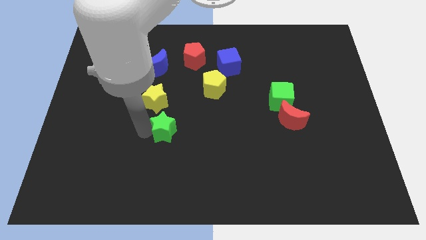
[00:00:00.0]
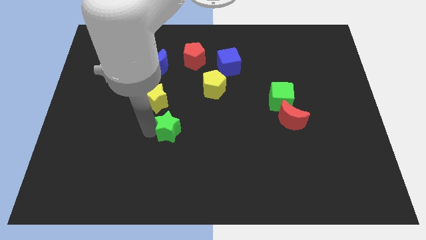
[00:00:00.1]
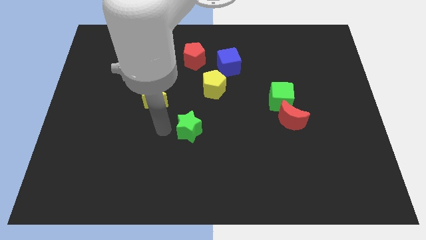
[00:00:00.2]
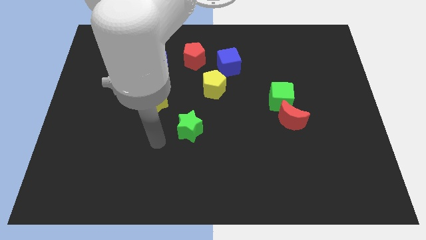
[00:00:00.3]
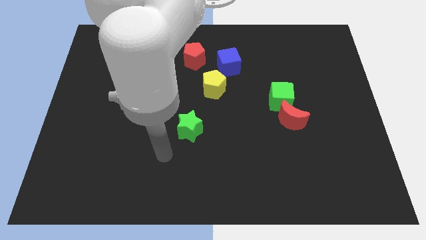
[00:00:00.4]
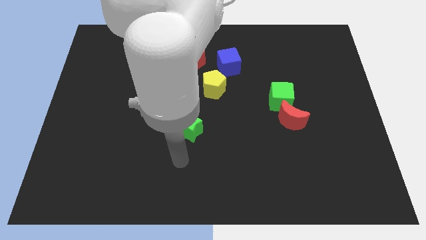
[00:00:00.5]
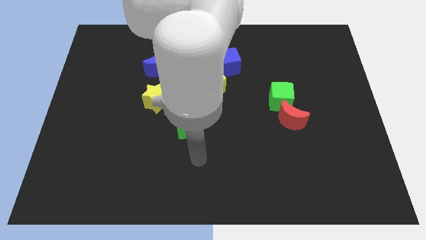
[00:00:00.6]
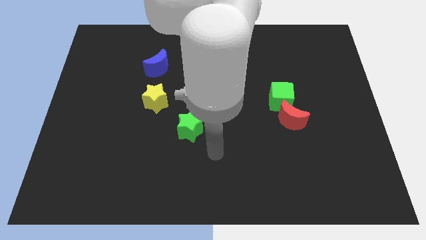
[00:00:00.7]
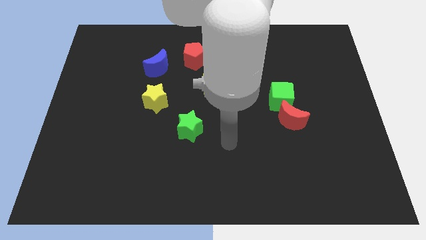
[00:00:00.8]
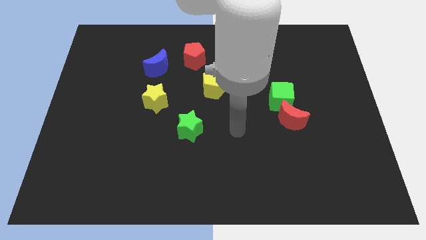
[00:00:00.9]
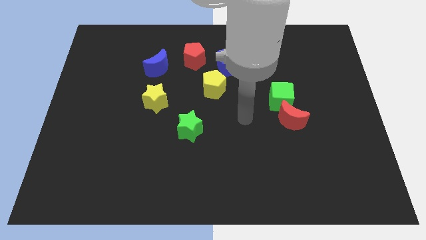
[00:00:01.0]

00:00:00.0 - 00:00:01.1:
slightly push the green star to the right

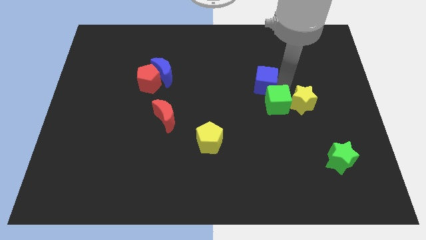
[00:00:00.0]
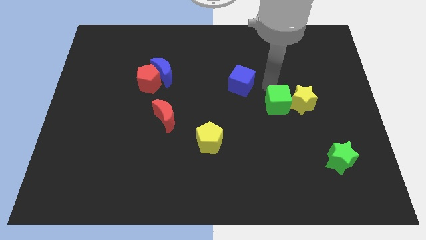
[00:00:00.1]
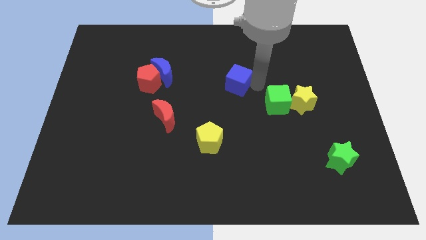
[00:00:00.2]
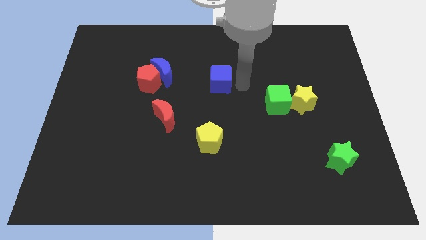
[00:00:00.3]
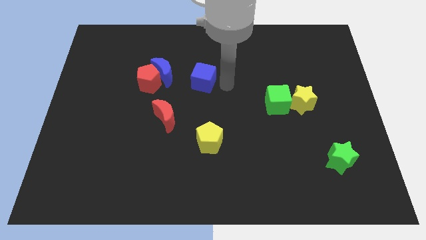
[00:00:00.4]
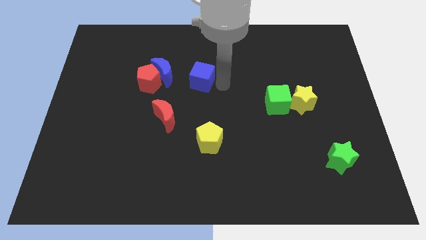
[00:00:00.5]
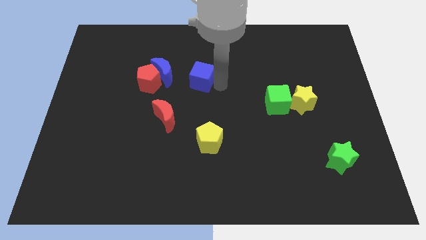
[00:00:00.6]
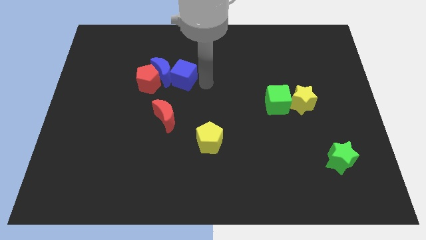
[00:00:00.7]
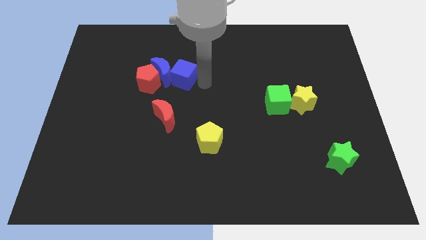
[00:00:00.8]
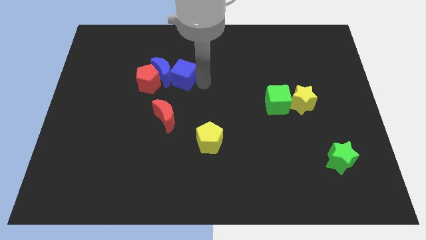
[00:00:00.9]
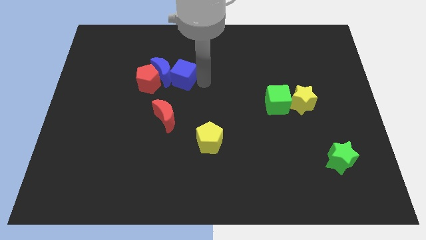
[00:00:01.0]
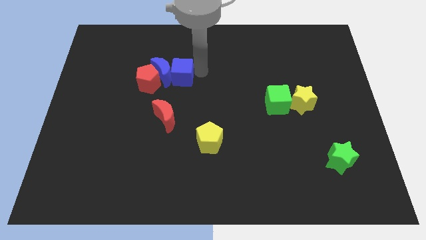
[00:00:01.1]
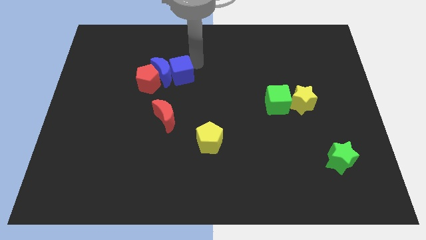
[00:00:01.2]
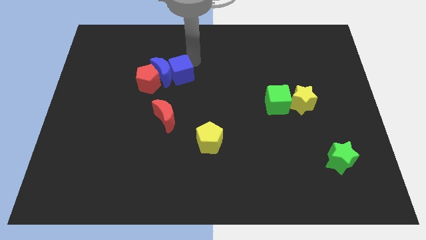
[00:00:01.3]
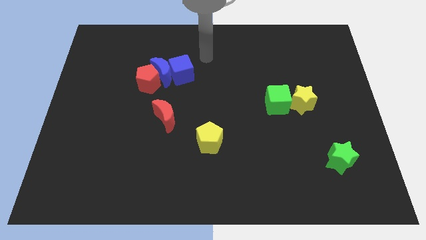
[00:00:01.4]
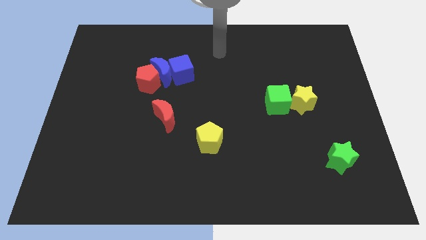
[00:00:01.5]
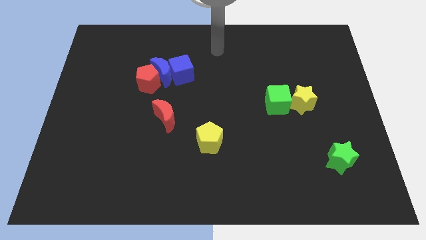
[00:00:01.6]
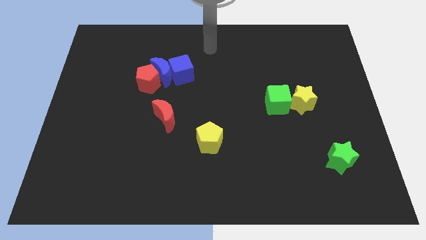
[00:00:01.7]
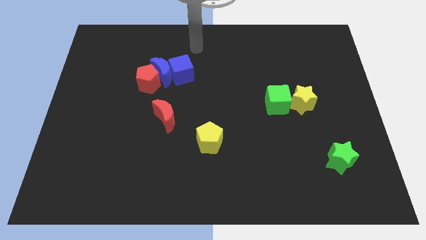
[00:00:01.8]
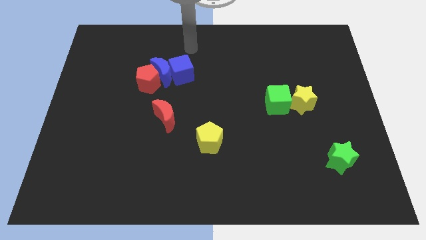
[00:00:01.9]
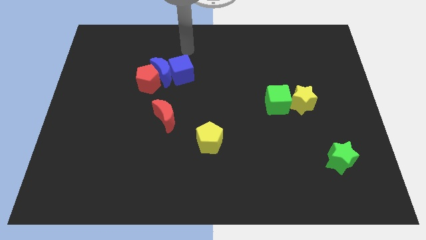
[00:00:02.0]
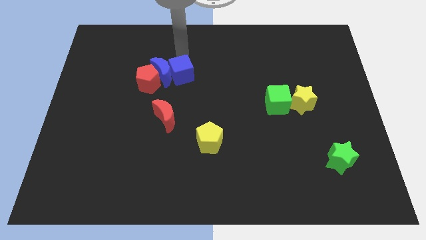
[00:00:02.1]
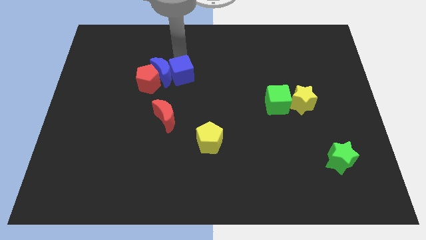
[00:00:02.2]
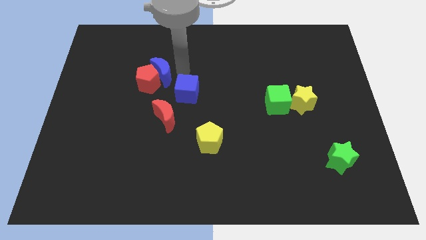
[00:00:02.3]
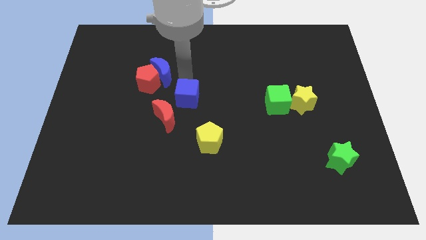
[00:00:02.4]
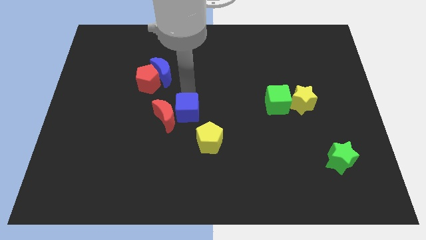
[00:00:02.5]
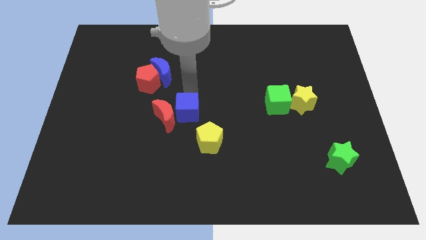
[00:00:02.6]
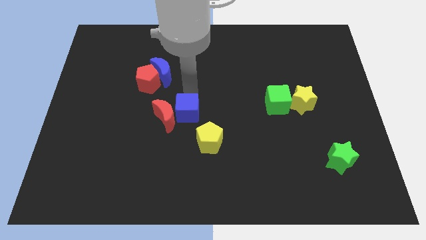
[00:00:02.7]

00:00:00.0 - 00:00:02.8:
push blue cube beside red crescent

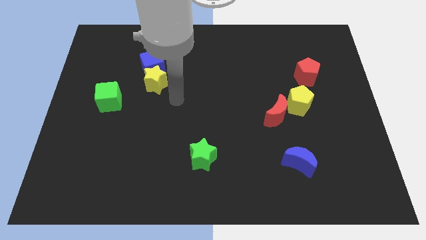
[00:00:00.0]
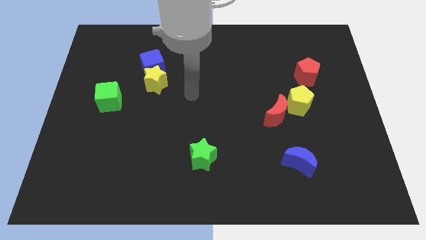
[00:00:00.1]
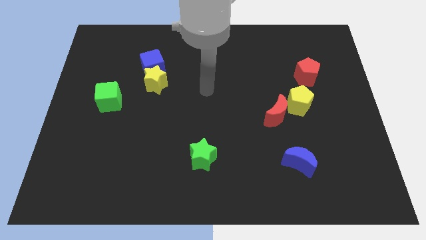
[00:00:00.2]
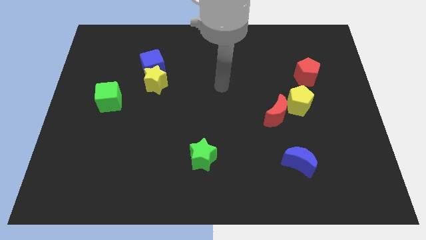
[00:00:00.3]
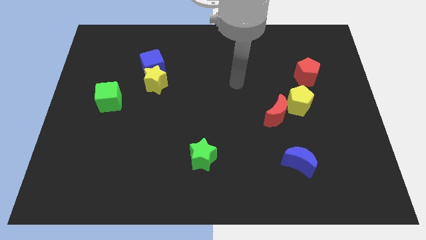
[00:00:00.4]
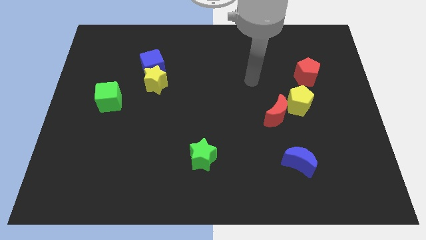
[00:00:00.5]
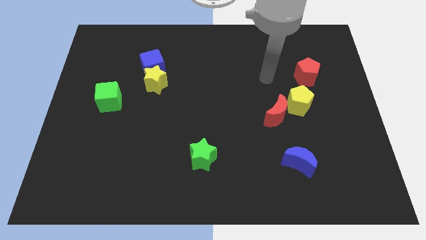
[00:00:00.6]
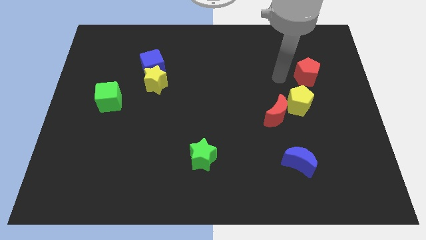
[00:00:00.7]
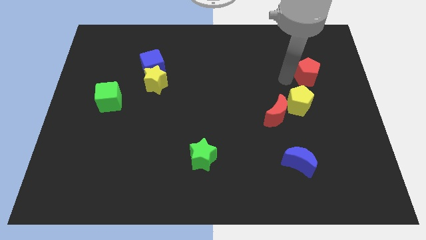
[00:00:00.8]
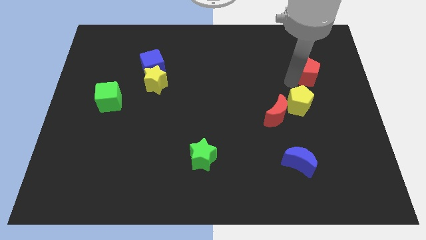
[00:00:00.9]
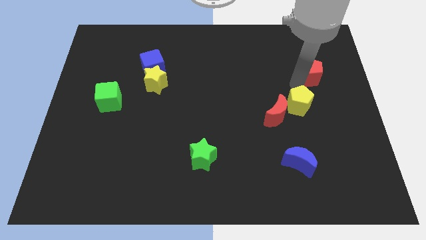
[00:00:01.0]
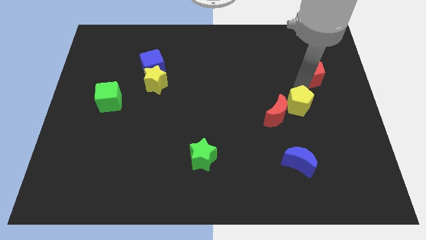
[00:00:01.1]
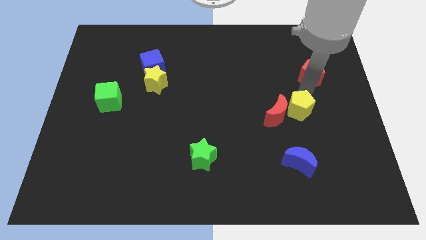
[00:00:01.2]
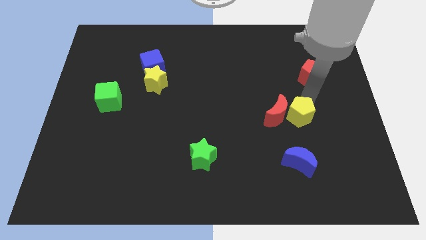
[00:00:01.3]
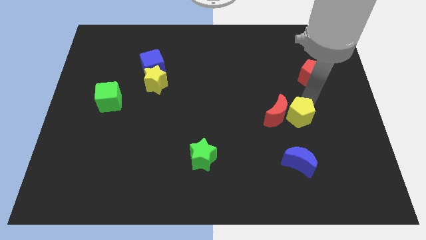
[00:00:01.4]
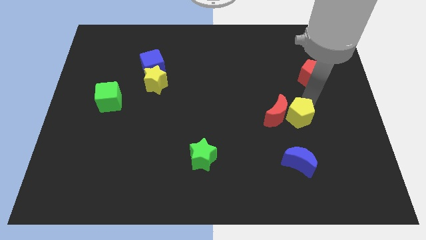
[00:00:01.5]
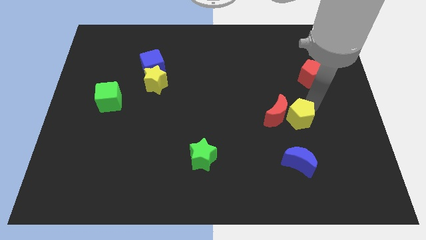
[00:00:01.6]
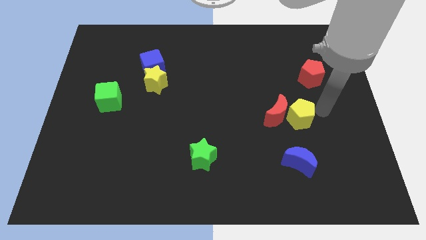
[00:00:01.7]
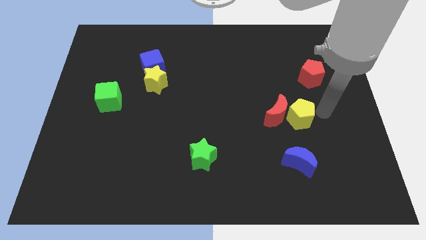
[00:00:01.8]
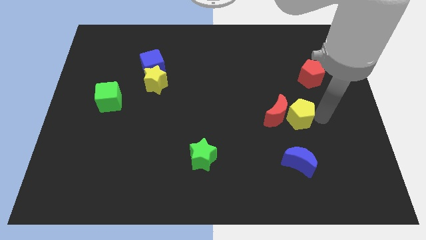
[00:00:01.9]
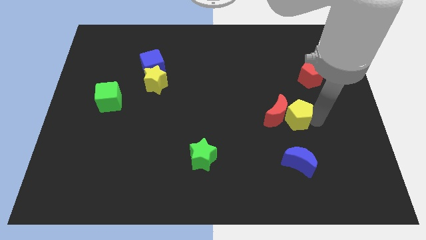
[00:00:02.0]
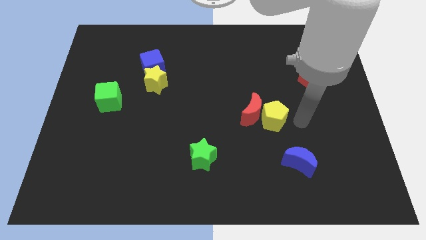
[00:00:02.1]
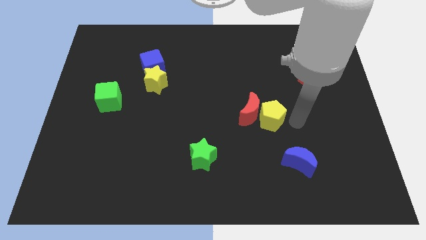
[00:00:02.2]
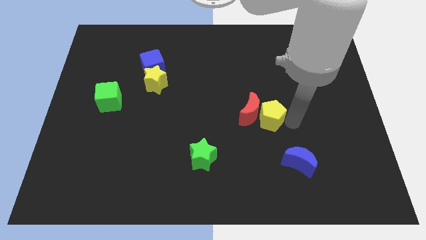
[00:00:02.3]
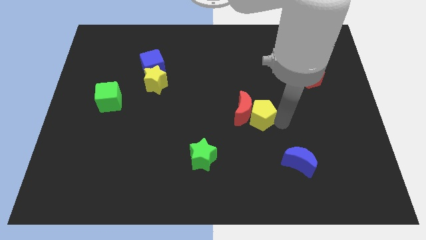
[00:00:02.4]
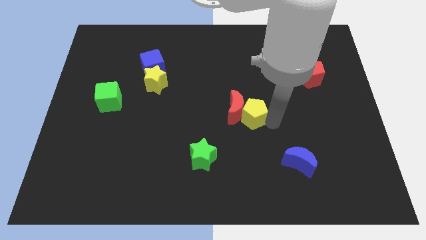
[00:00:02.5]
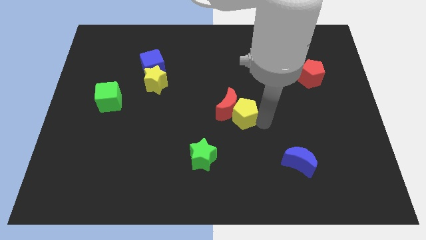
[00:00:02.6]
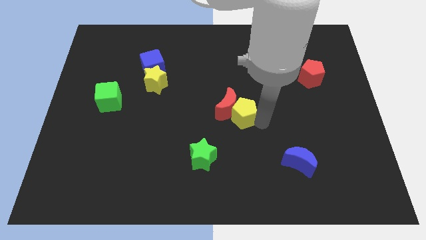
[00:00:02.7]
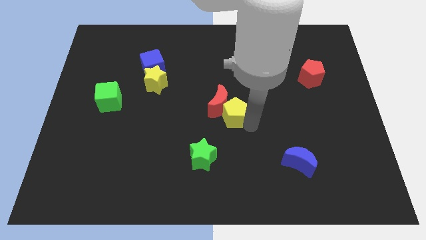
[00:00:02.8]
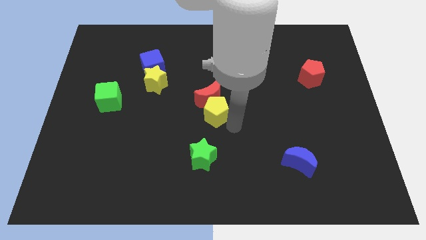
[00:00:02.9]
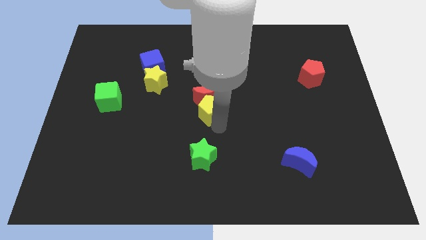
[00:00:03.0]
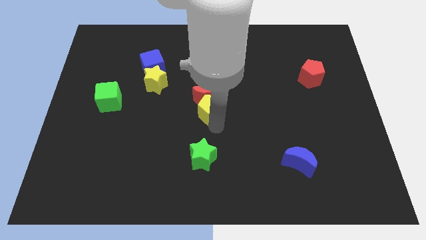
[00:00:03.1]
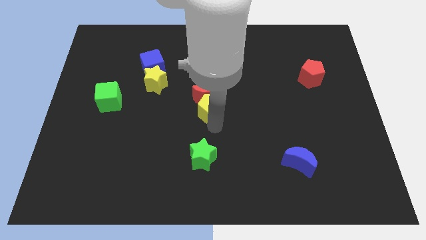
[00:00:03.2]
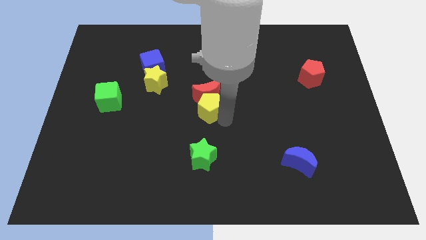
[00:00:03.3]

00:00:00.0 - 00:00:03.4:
move the yellow pentagon and the red crescent into the center of the board

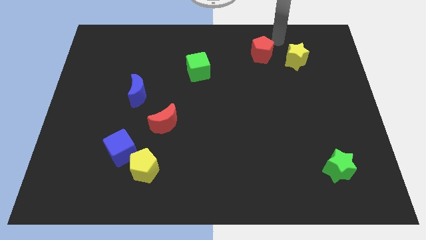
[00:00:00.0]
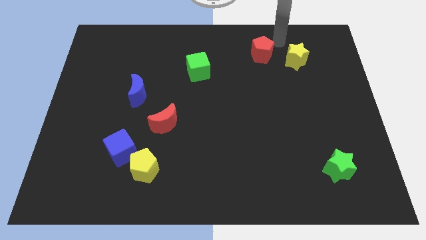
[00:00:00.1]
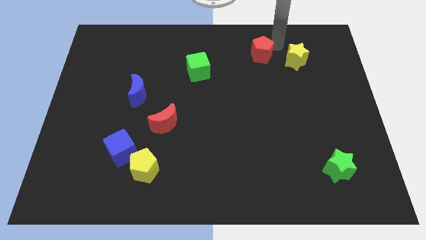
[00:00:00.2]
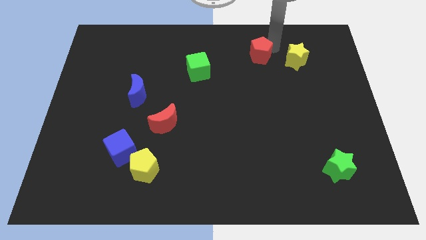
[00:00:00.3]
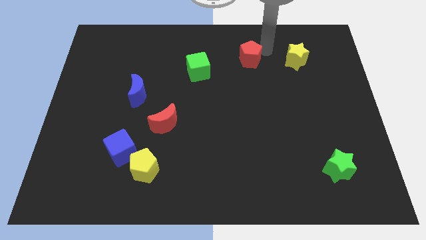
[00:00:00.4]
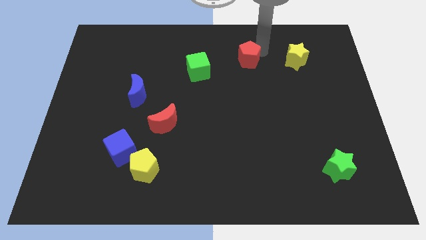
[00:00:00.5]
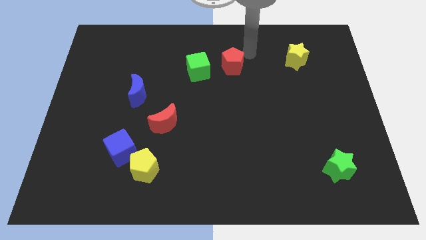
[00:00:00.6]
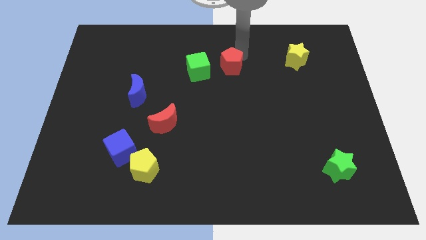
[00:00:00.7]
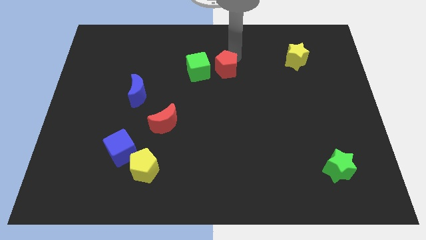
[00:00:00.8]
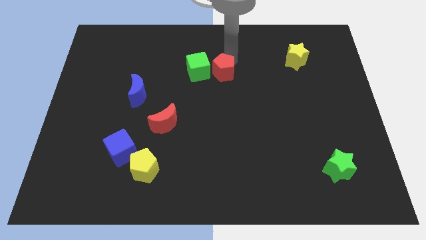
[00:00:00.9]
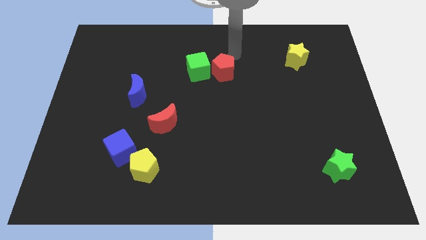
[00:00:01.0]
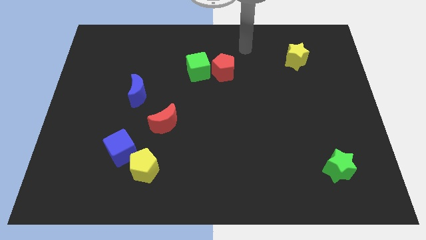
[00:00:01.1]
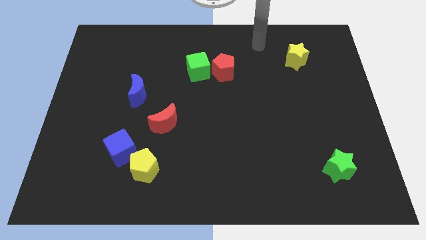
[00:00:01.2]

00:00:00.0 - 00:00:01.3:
move the red pentagon close to the green cube

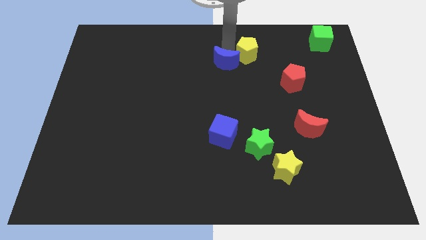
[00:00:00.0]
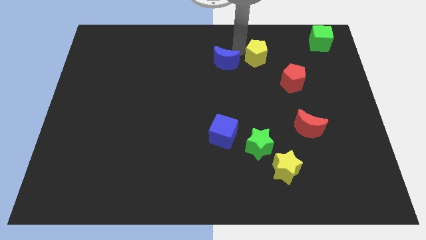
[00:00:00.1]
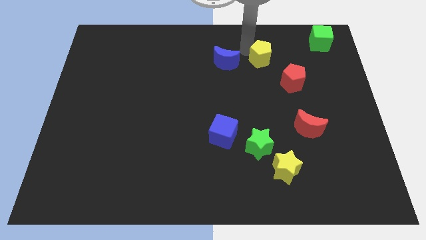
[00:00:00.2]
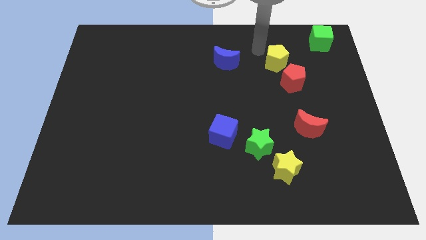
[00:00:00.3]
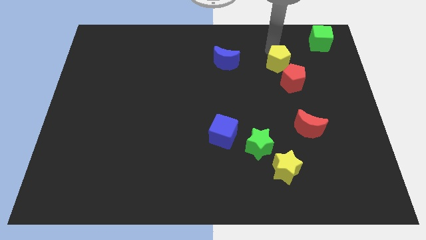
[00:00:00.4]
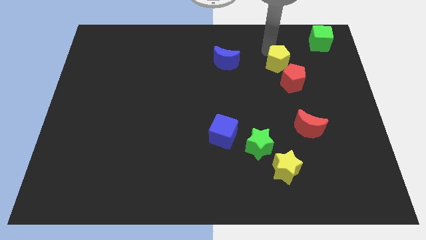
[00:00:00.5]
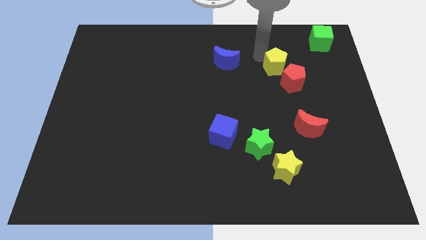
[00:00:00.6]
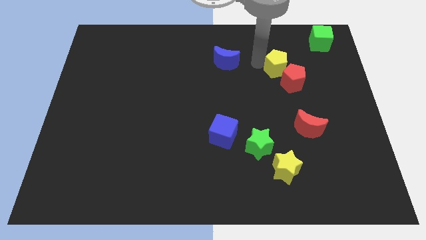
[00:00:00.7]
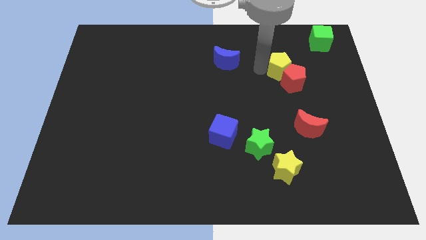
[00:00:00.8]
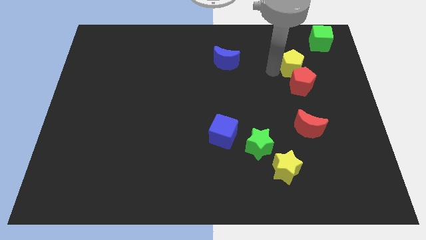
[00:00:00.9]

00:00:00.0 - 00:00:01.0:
move yellow pentagon in to red pentagon
